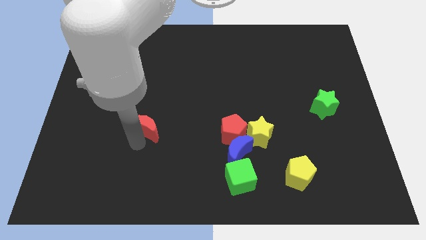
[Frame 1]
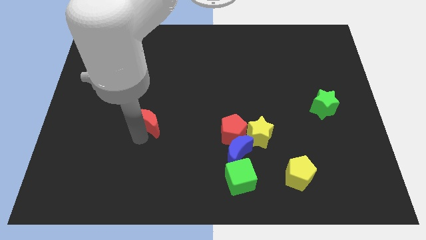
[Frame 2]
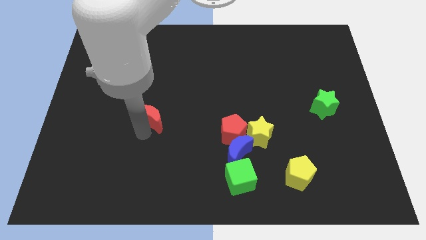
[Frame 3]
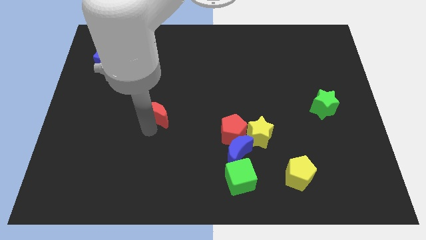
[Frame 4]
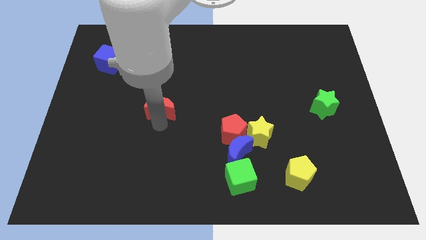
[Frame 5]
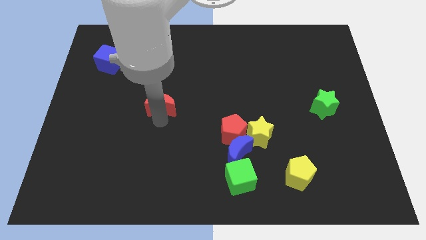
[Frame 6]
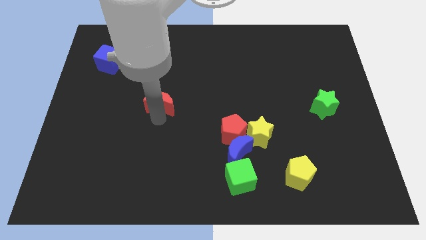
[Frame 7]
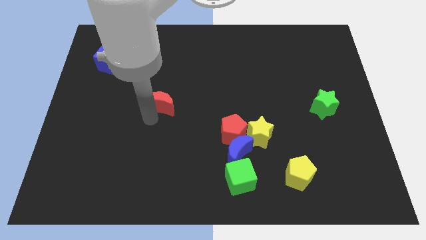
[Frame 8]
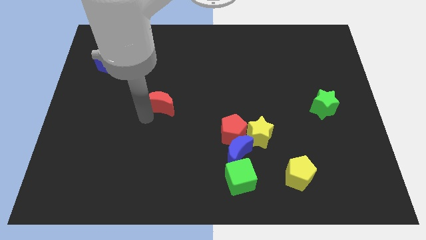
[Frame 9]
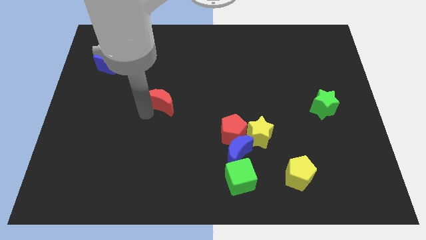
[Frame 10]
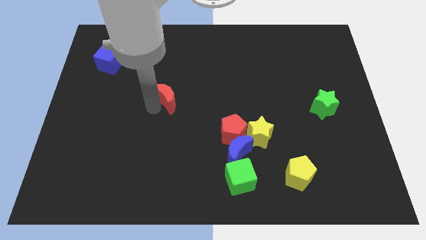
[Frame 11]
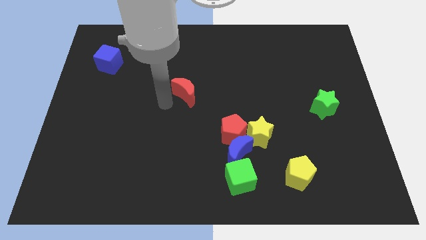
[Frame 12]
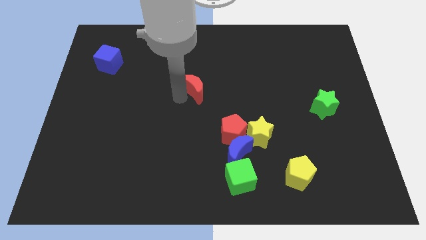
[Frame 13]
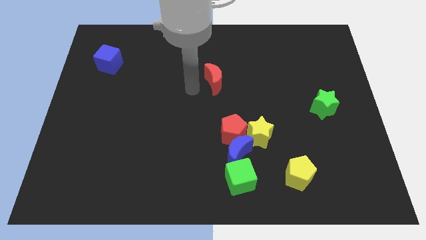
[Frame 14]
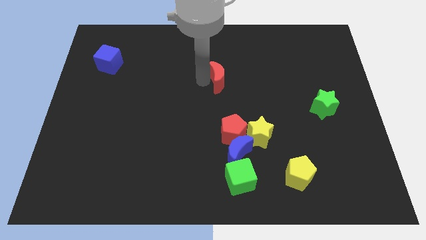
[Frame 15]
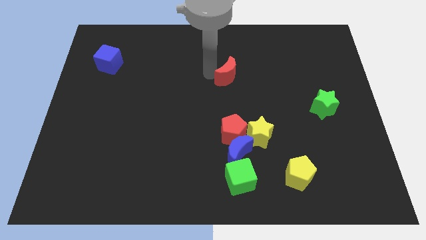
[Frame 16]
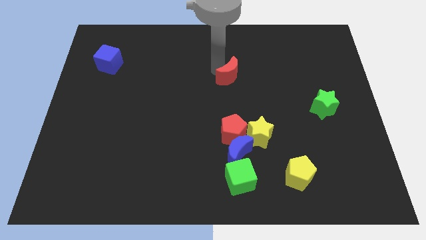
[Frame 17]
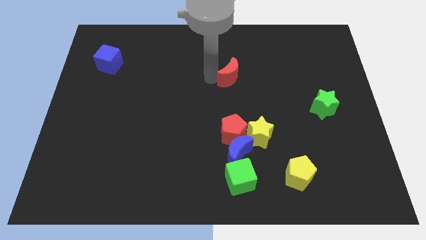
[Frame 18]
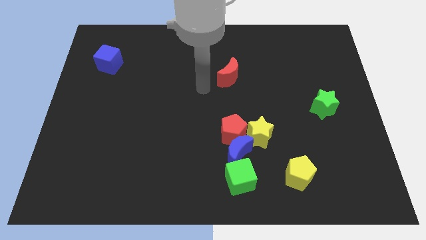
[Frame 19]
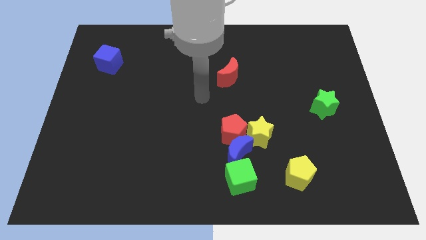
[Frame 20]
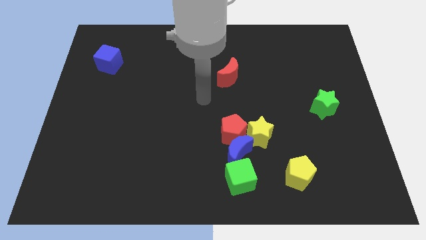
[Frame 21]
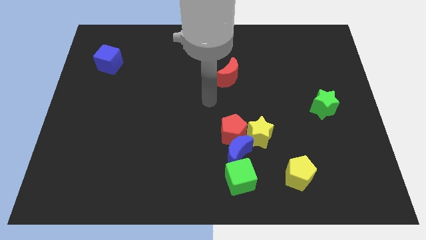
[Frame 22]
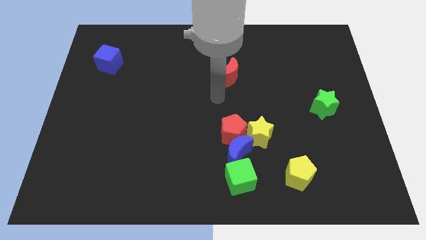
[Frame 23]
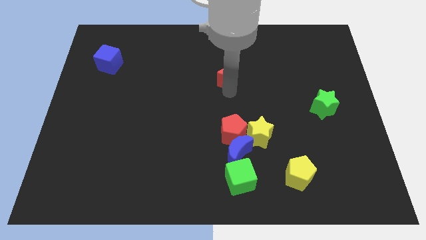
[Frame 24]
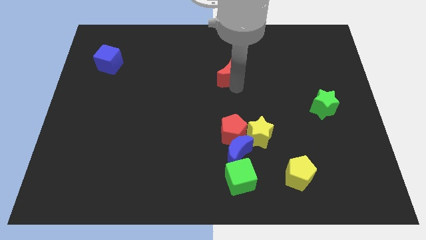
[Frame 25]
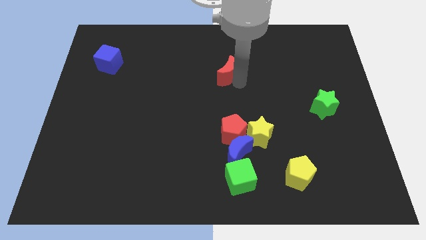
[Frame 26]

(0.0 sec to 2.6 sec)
push red crescent upwards

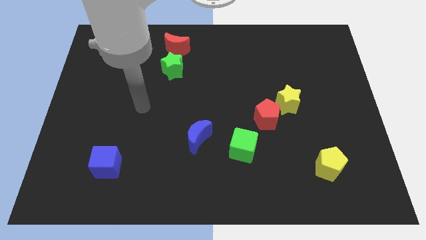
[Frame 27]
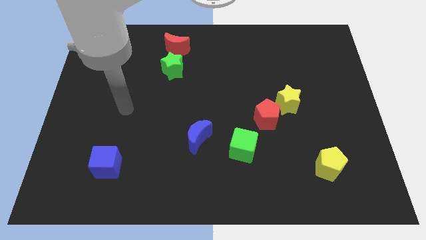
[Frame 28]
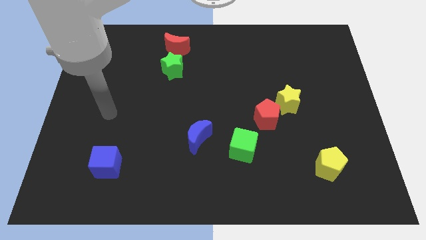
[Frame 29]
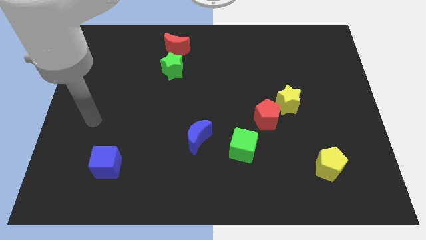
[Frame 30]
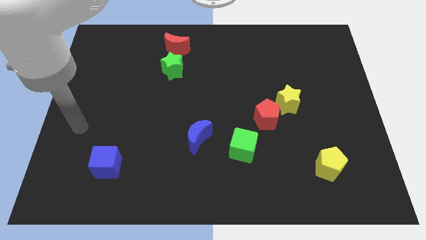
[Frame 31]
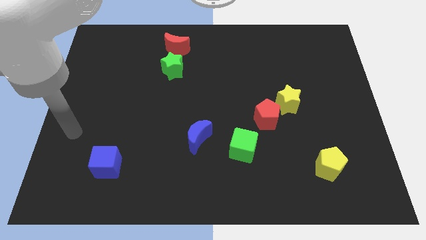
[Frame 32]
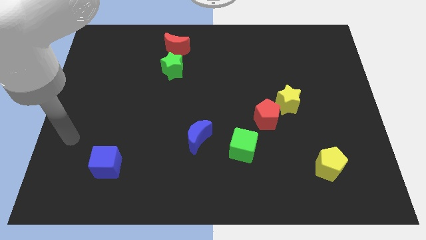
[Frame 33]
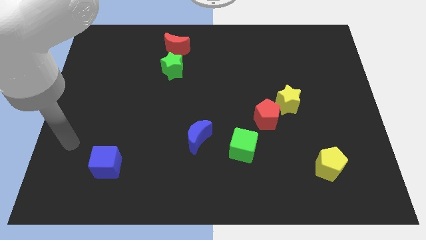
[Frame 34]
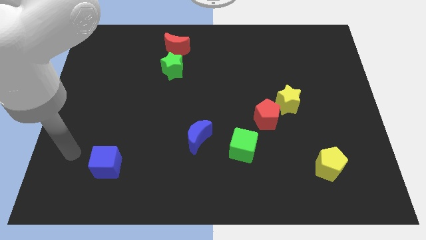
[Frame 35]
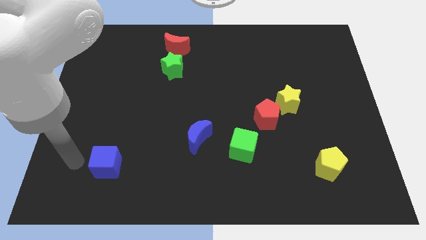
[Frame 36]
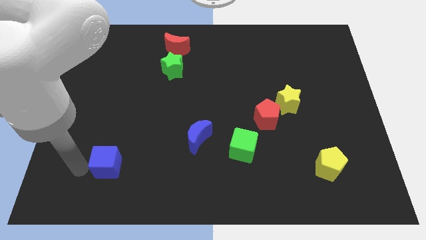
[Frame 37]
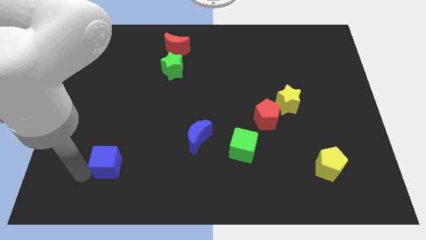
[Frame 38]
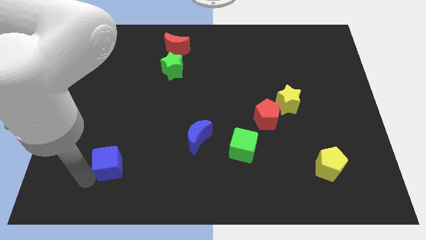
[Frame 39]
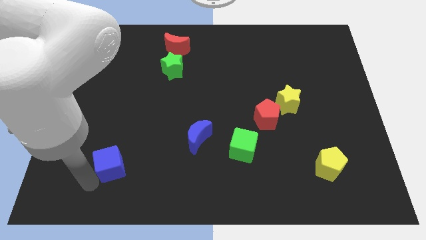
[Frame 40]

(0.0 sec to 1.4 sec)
touch the bottom of blue cube

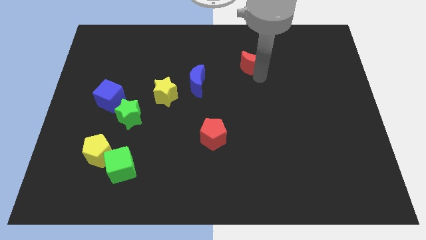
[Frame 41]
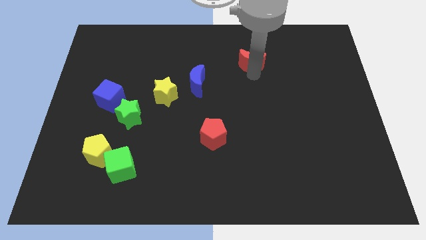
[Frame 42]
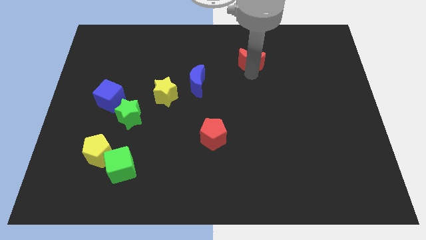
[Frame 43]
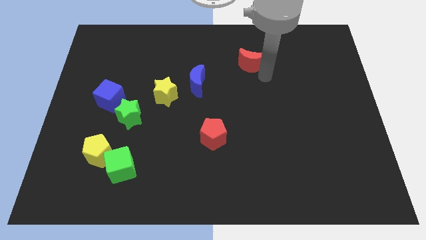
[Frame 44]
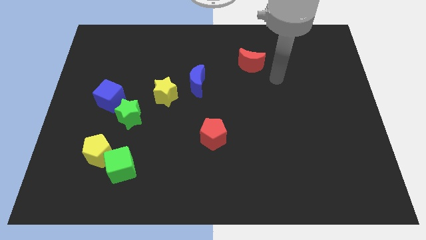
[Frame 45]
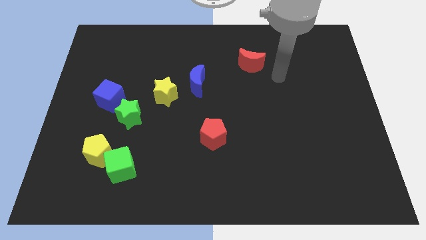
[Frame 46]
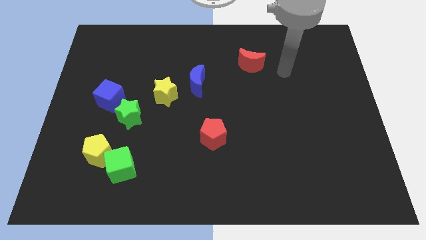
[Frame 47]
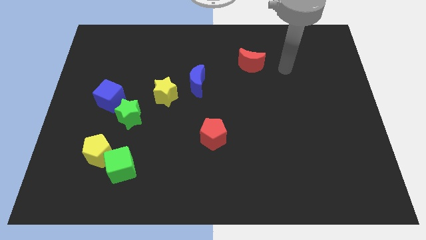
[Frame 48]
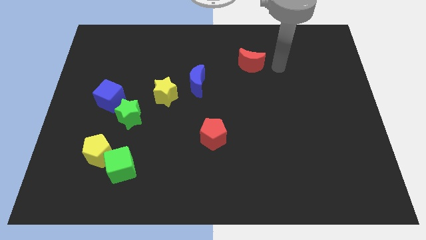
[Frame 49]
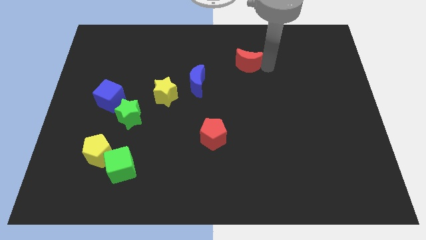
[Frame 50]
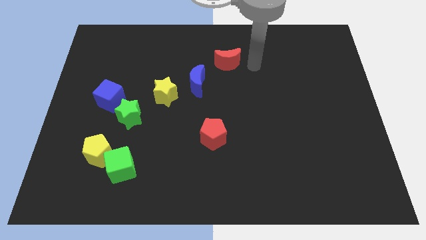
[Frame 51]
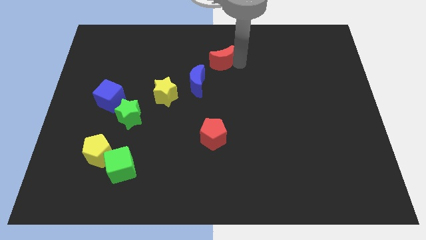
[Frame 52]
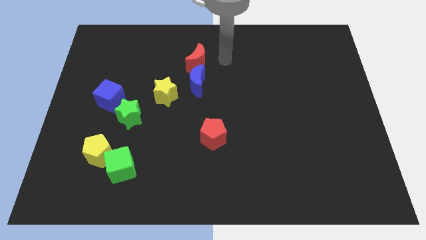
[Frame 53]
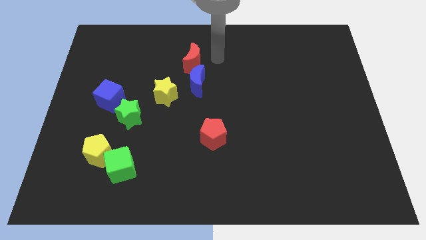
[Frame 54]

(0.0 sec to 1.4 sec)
place the red crescent above the blue crescent

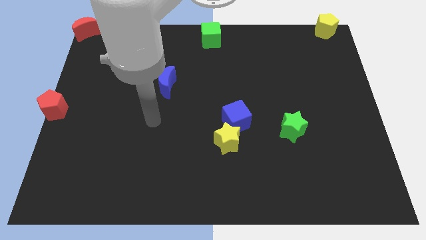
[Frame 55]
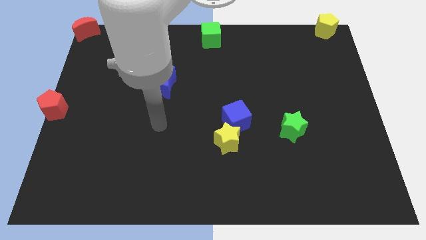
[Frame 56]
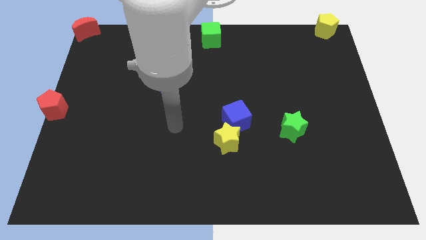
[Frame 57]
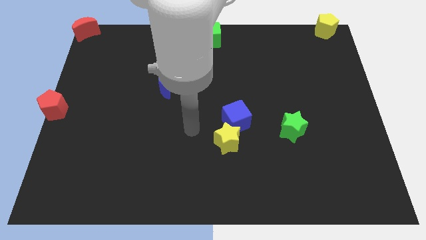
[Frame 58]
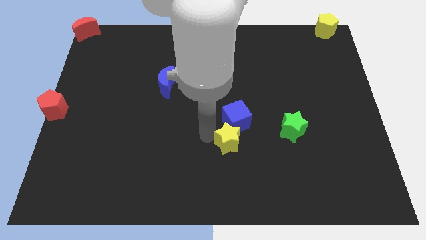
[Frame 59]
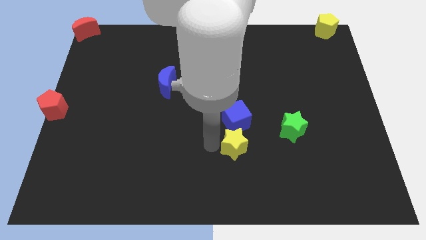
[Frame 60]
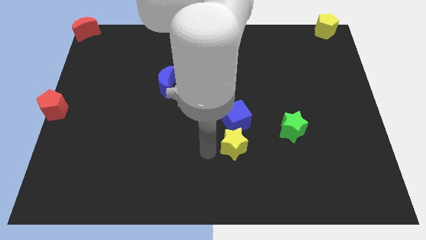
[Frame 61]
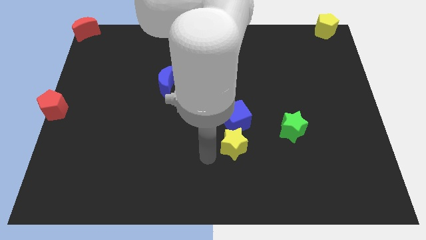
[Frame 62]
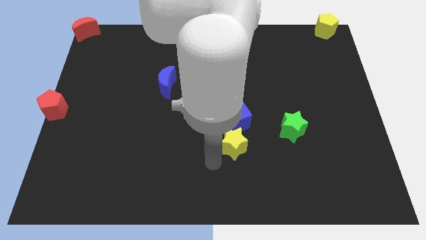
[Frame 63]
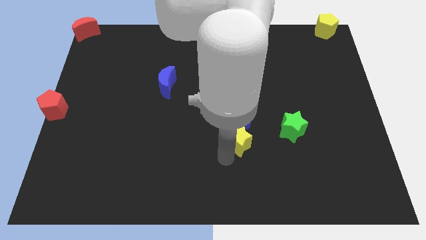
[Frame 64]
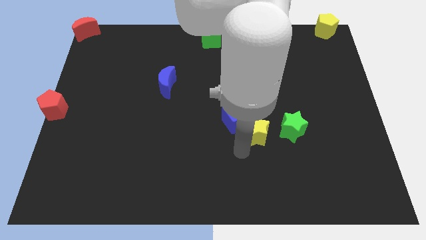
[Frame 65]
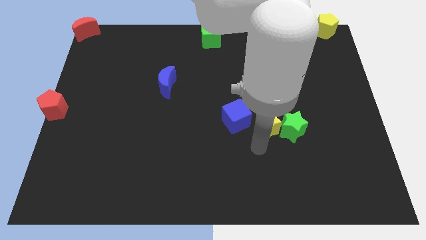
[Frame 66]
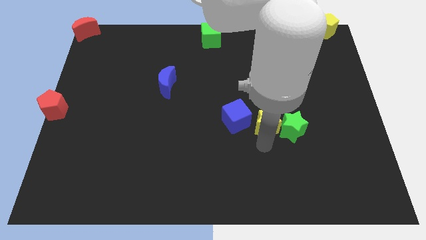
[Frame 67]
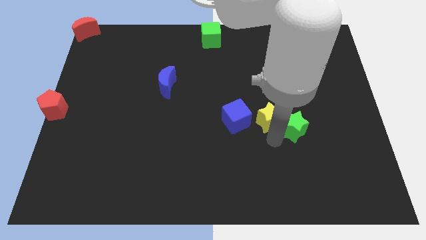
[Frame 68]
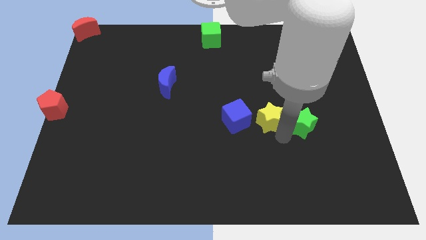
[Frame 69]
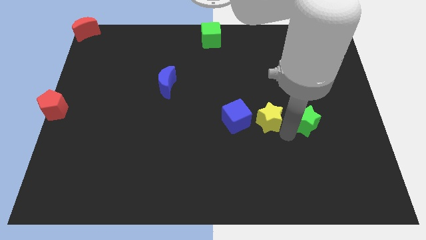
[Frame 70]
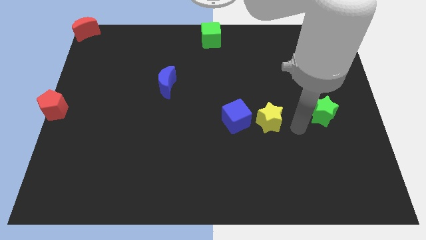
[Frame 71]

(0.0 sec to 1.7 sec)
place the yellow star right in between the blue cube and the green star

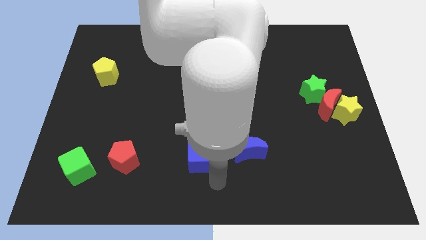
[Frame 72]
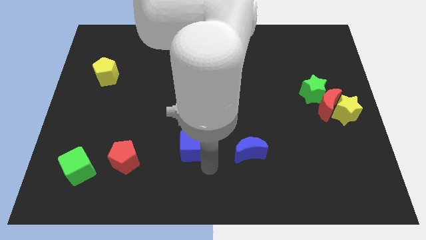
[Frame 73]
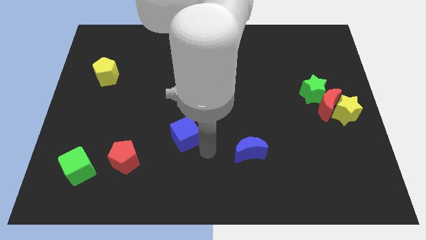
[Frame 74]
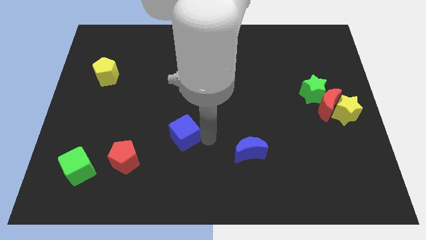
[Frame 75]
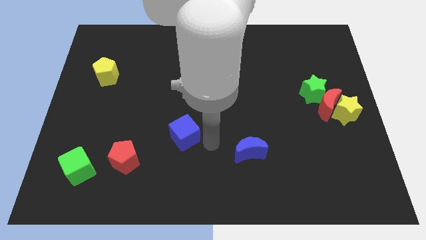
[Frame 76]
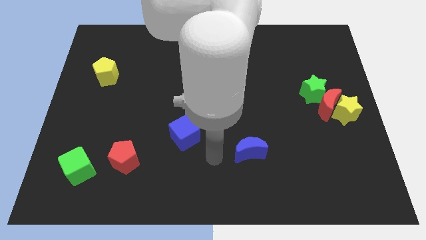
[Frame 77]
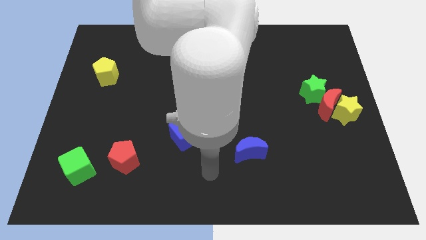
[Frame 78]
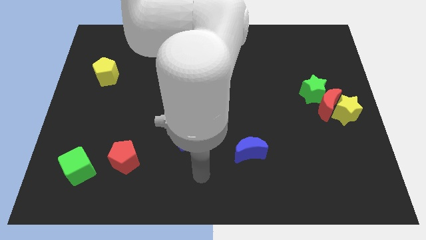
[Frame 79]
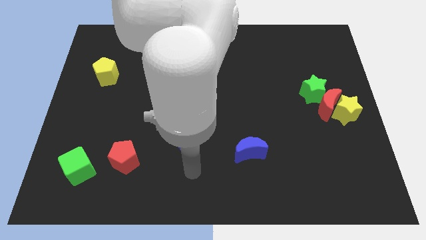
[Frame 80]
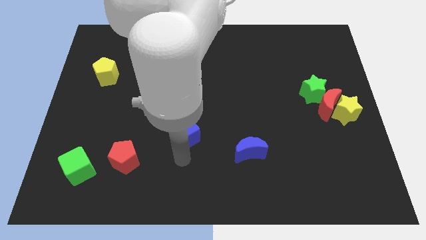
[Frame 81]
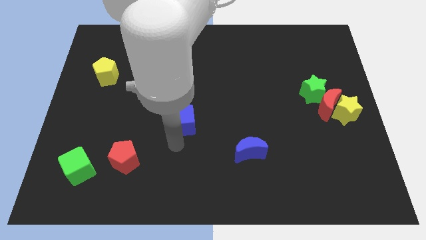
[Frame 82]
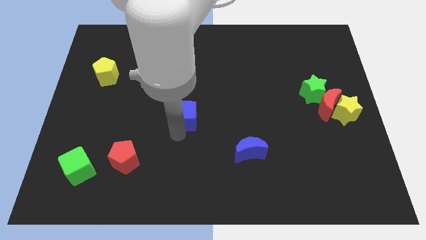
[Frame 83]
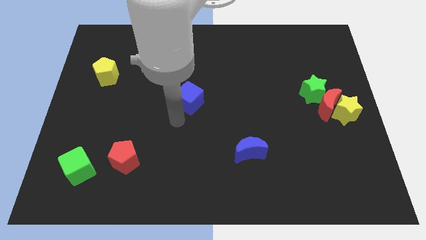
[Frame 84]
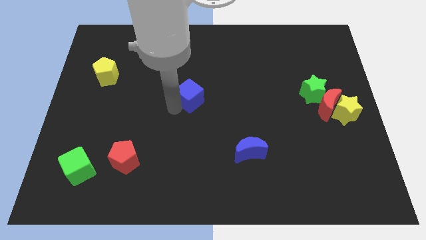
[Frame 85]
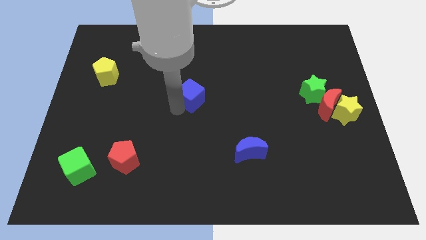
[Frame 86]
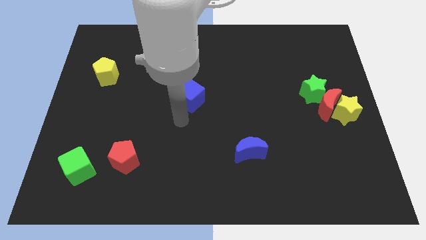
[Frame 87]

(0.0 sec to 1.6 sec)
place blue cube slightly towards upwards

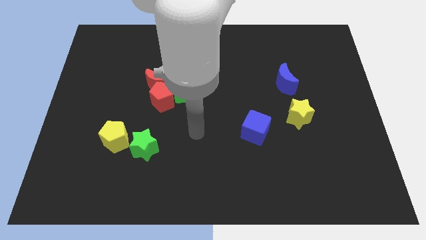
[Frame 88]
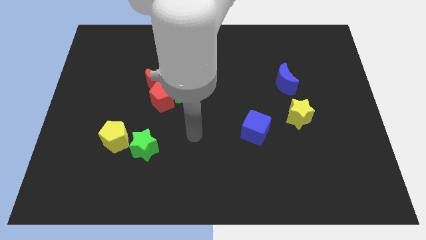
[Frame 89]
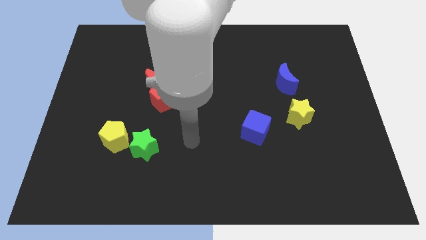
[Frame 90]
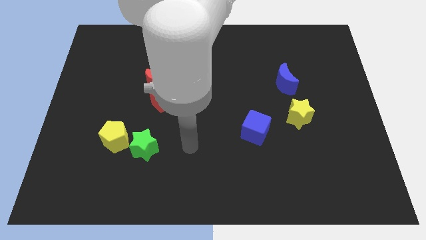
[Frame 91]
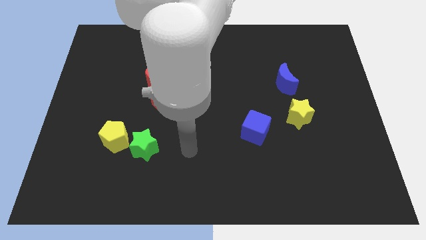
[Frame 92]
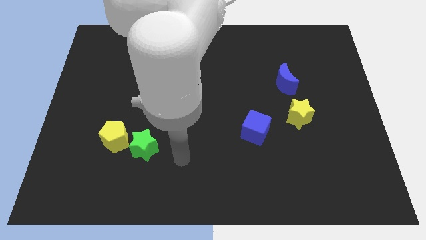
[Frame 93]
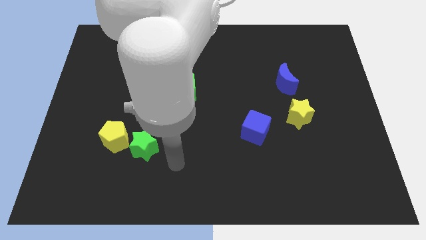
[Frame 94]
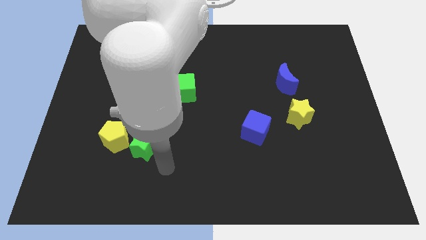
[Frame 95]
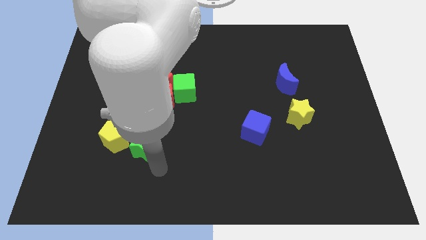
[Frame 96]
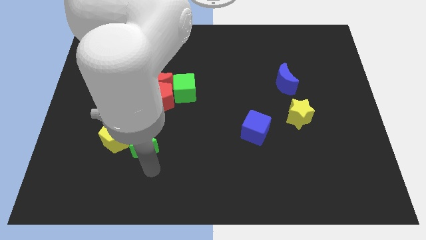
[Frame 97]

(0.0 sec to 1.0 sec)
place your arm at the bottom of green star
